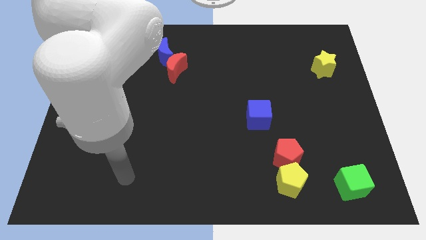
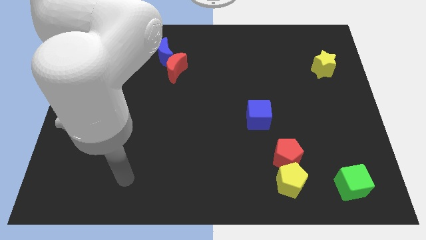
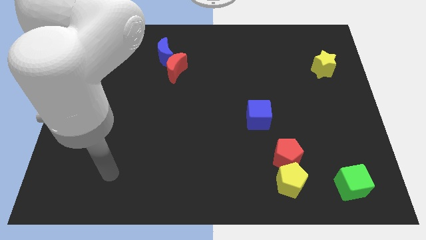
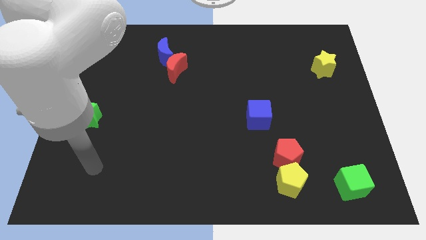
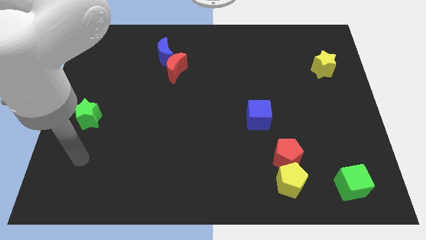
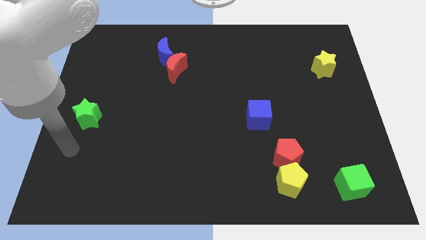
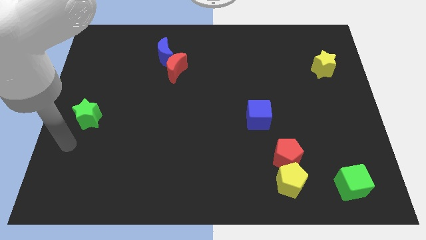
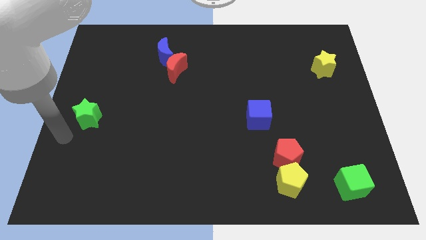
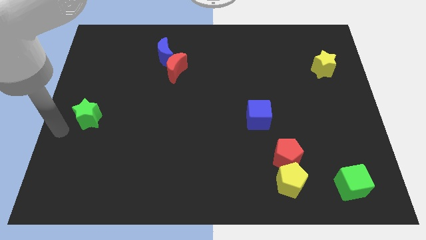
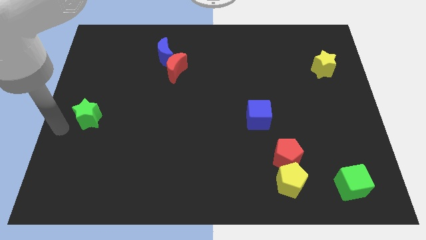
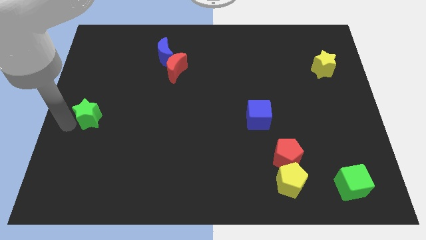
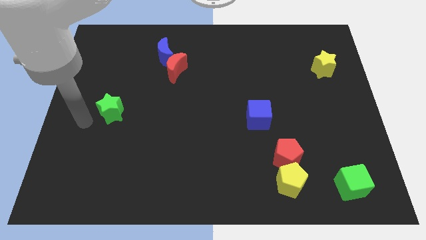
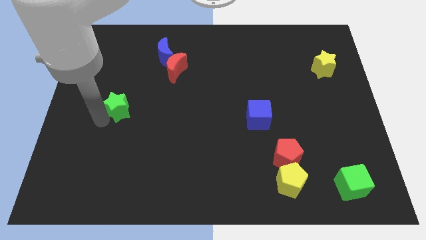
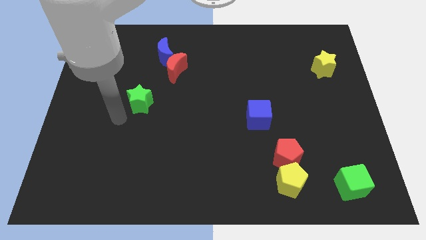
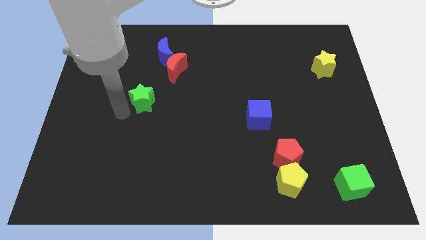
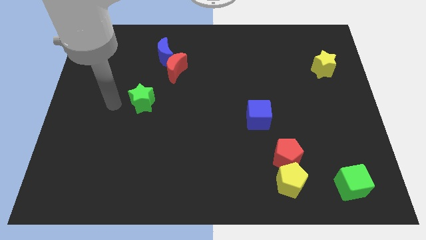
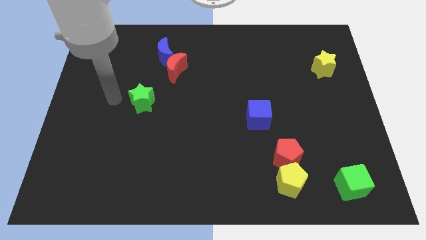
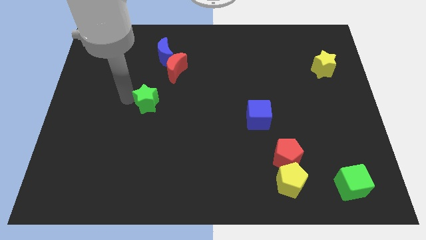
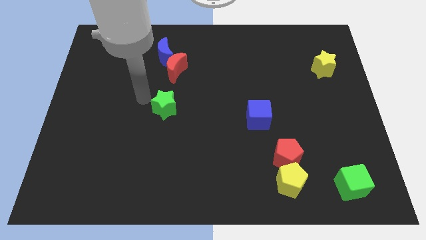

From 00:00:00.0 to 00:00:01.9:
push the green star below red moon

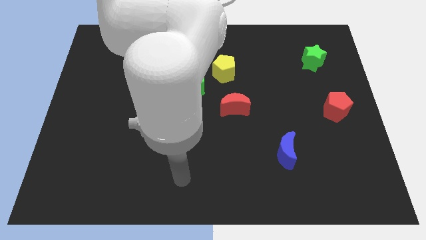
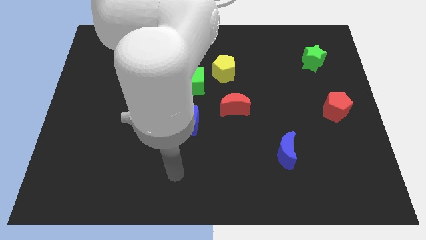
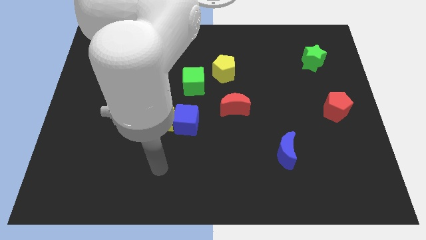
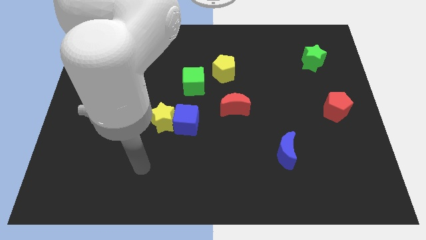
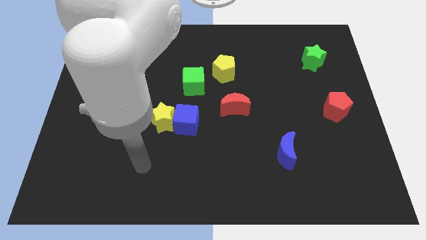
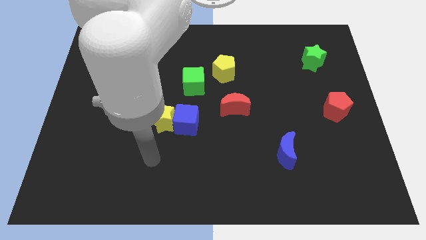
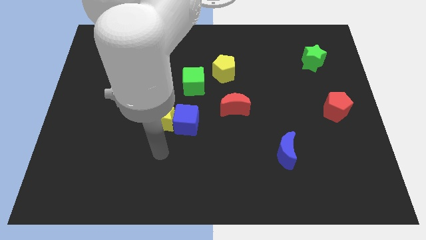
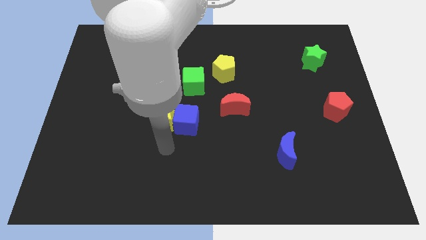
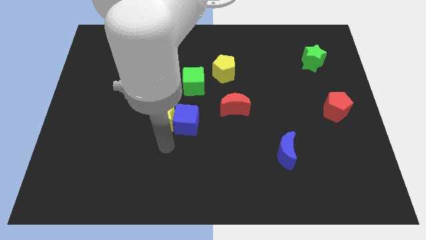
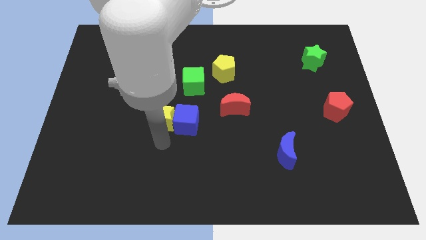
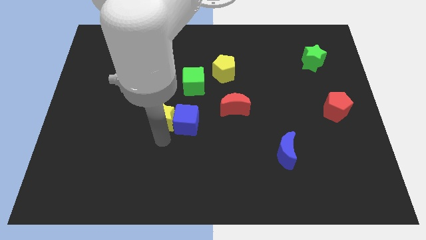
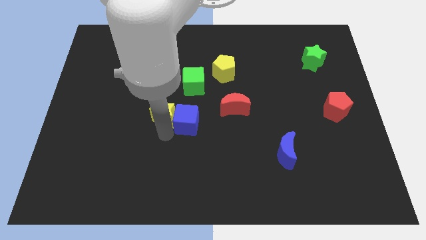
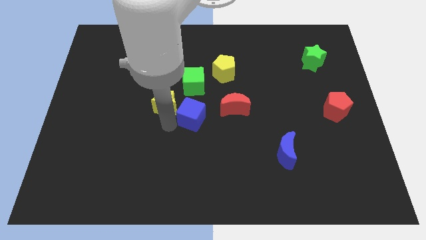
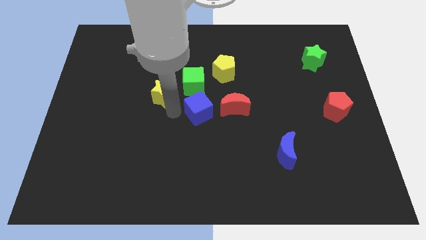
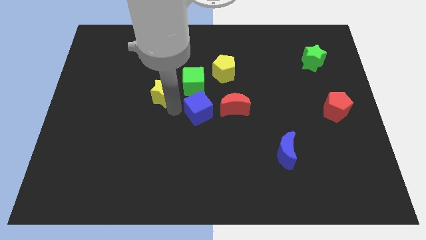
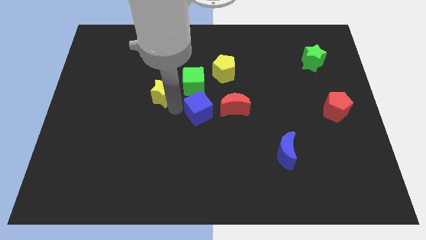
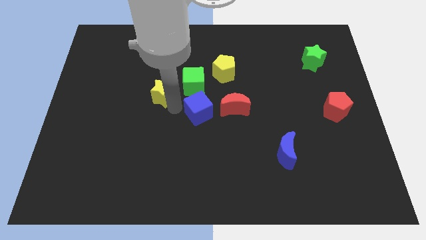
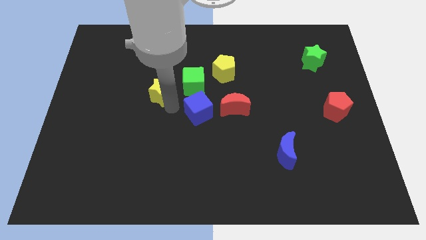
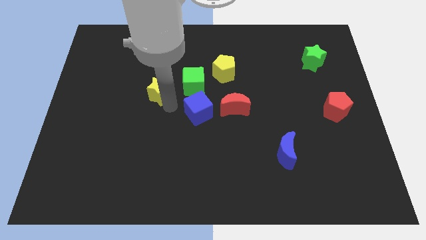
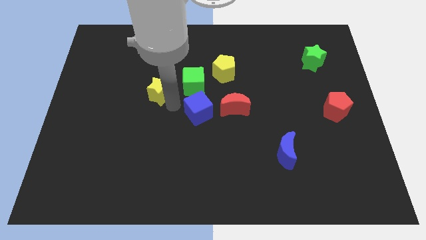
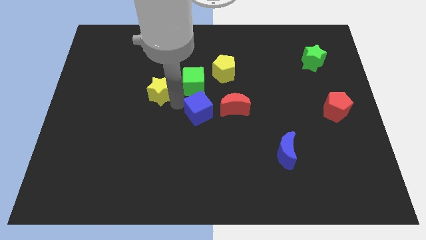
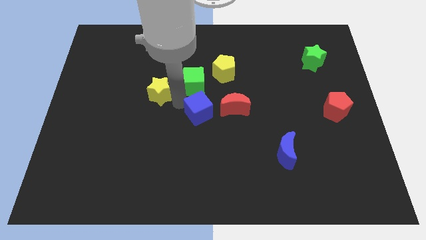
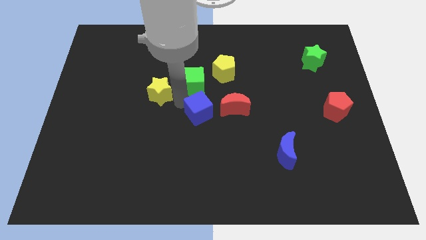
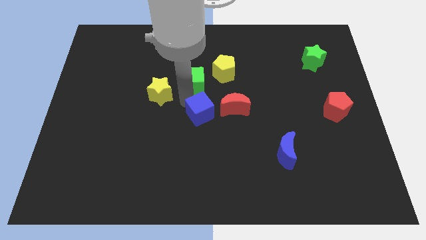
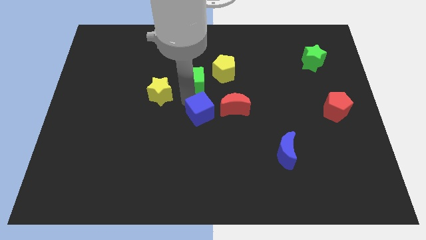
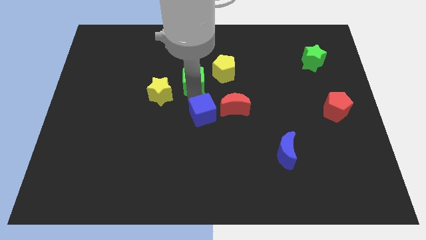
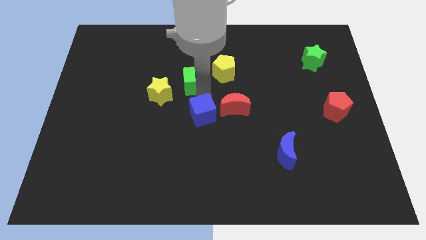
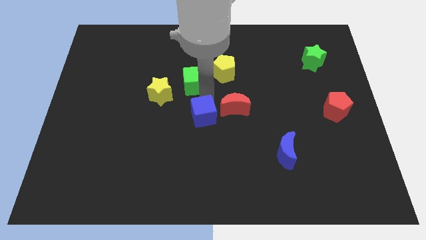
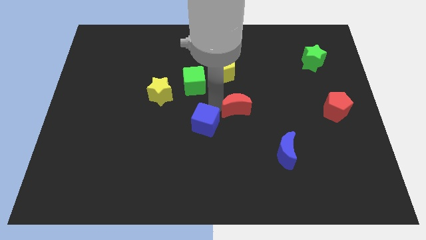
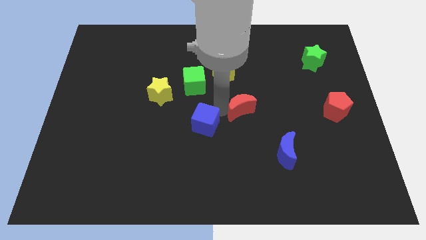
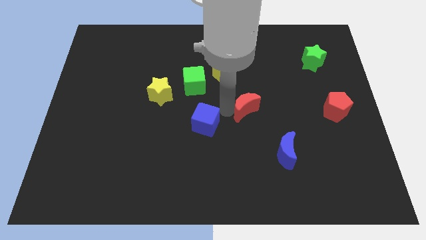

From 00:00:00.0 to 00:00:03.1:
separate yellow star and the blue cube

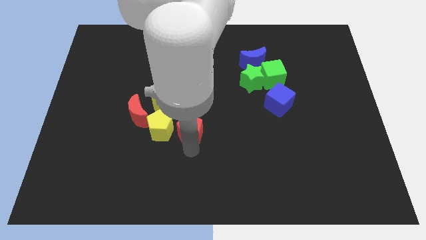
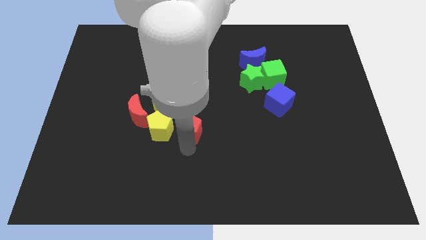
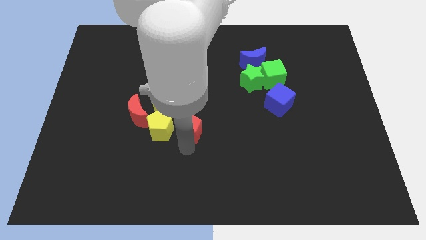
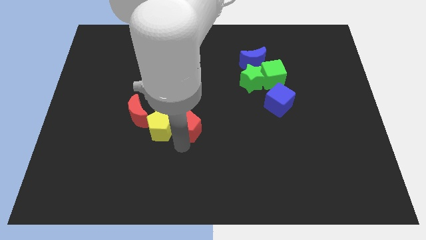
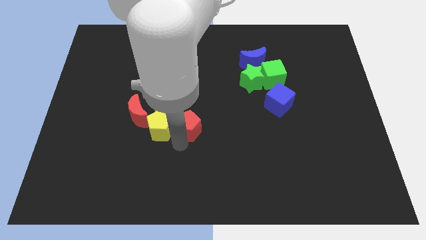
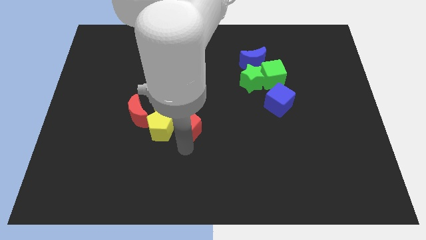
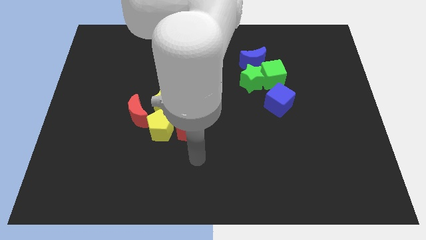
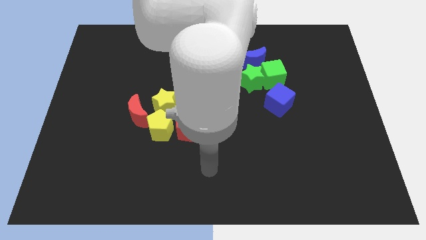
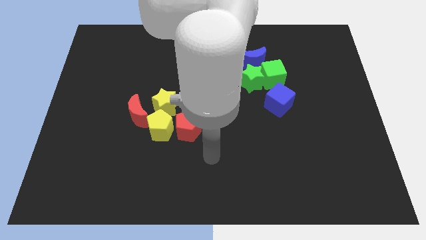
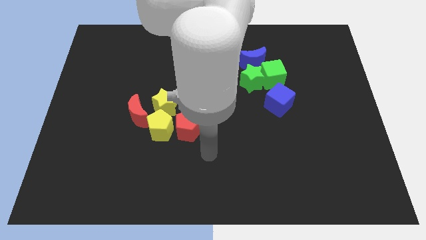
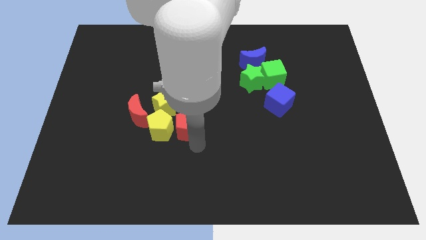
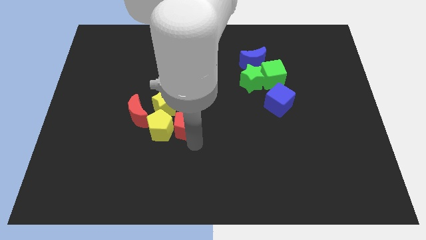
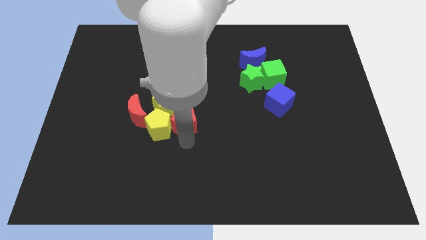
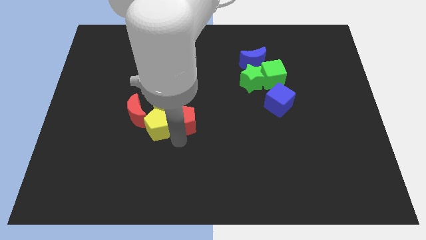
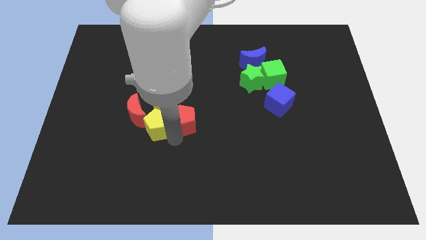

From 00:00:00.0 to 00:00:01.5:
push red pentagon slightly towards upwards

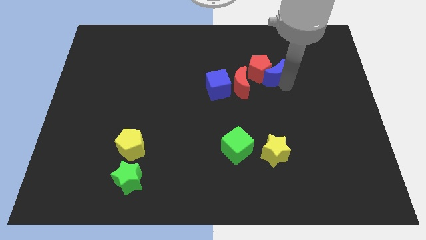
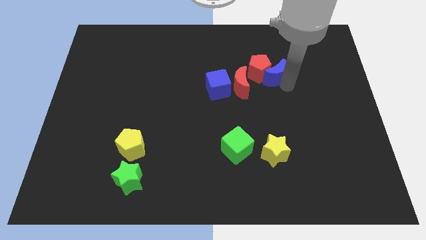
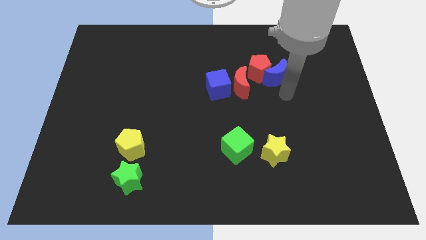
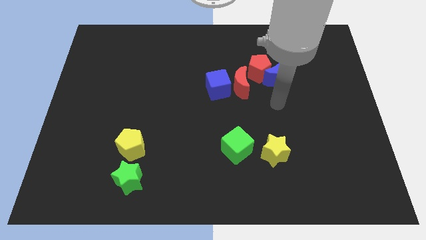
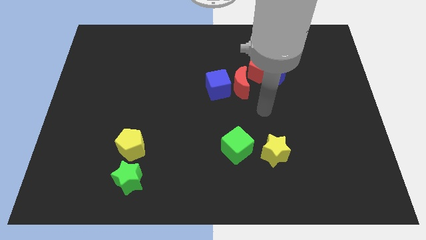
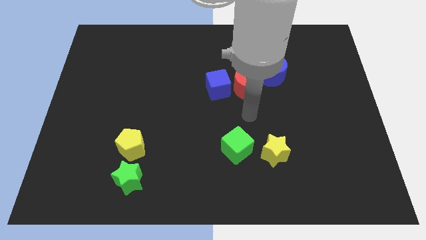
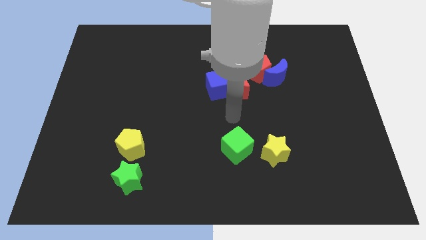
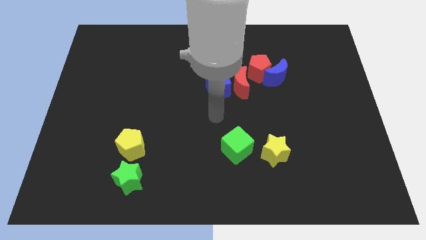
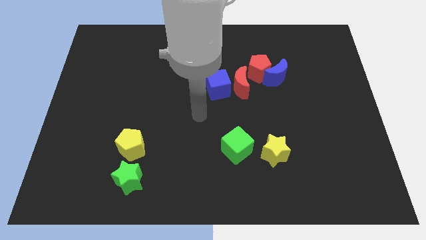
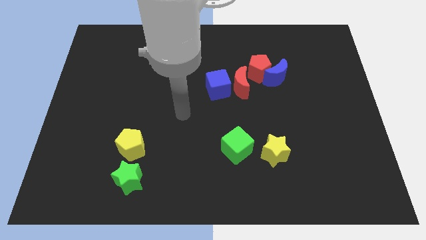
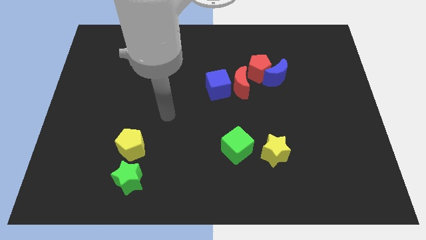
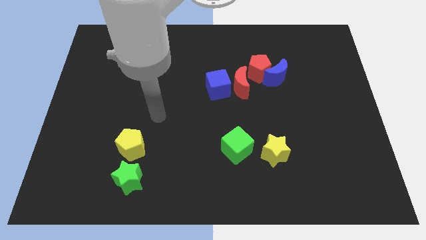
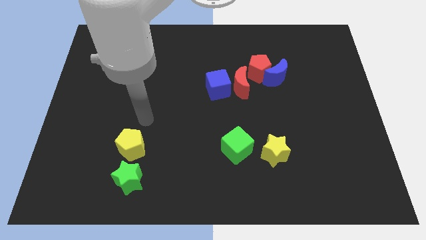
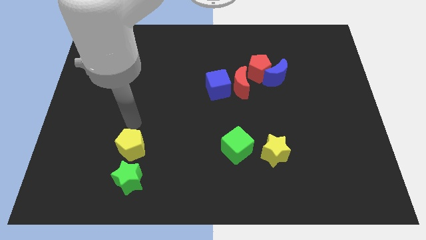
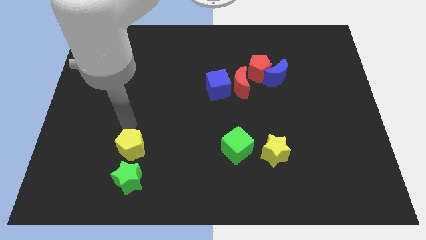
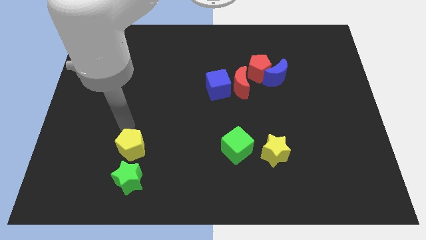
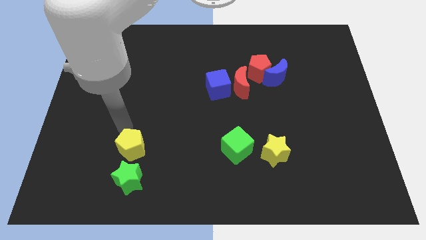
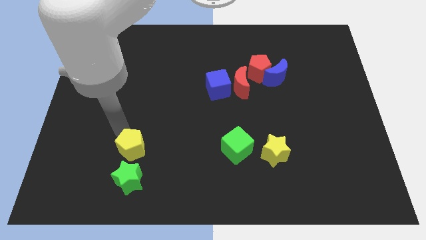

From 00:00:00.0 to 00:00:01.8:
push your arm above the yellow pentagon

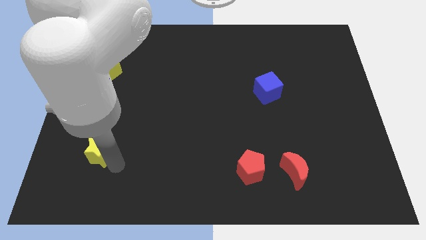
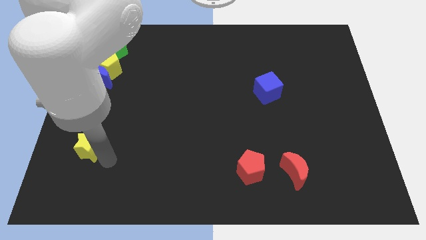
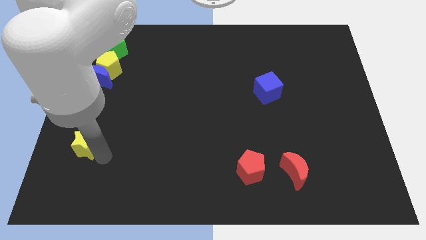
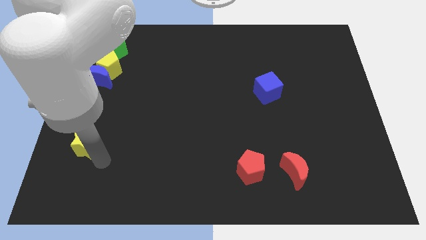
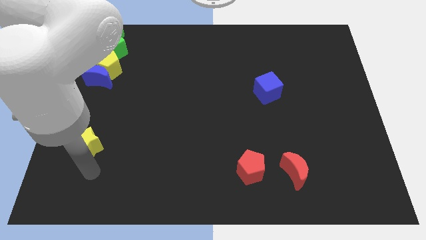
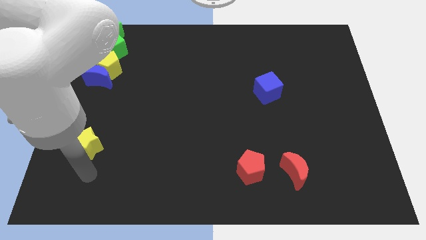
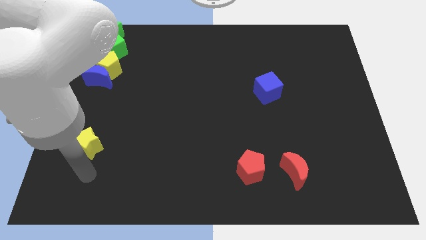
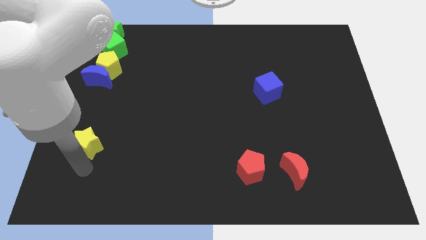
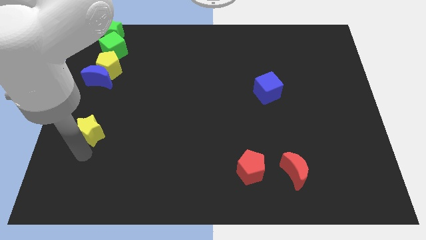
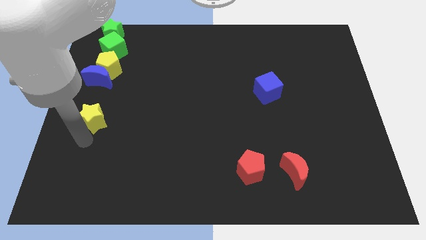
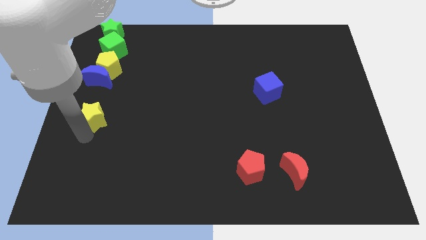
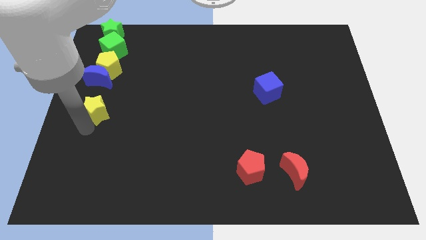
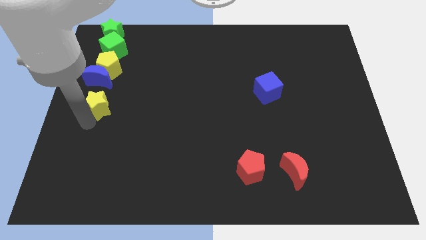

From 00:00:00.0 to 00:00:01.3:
push yellow star towards blue crescent
